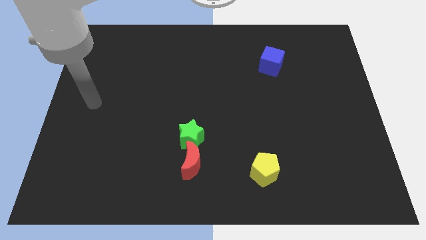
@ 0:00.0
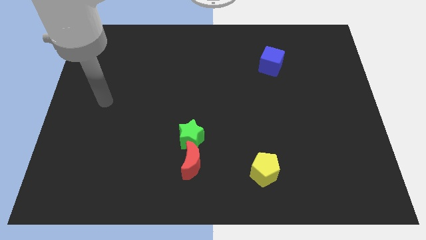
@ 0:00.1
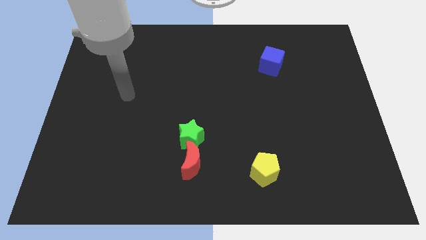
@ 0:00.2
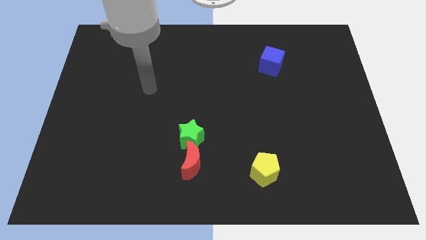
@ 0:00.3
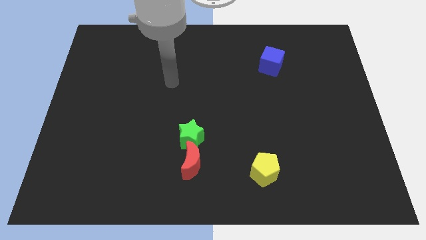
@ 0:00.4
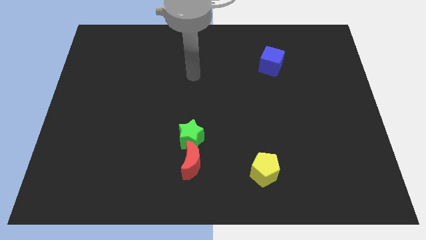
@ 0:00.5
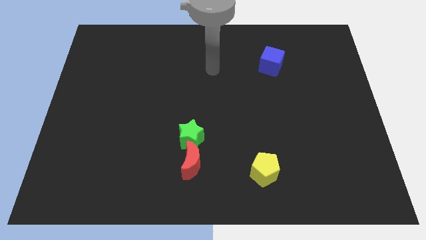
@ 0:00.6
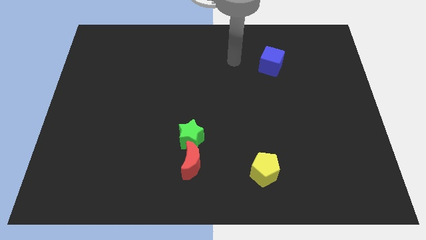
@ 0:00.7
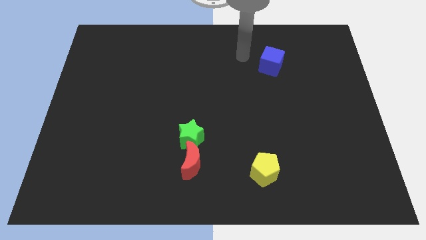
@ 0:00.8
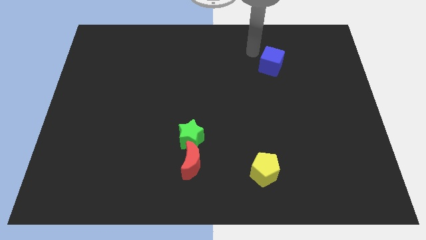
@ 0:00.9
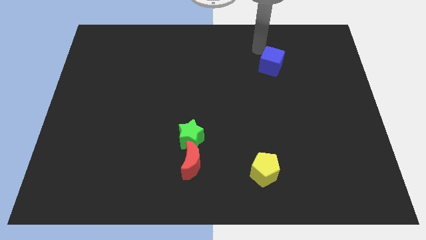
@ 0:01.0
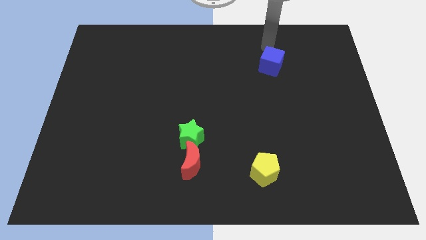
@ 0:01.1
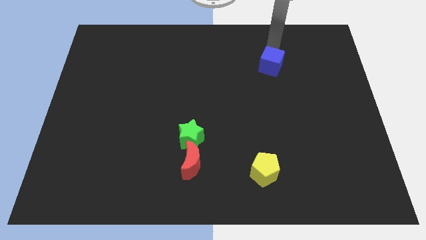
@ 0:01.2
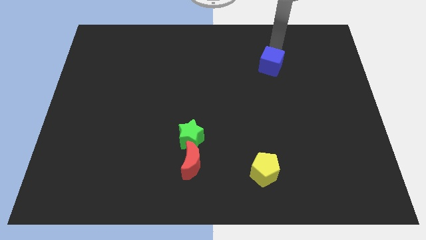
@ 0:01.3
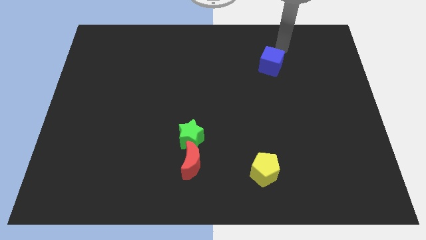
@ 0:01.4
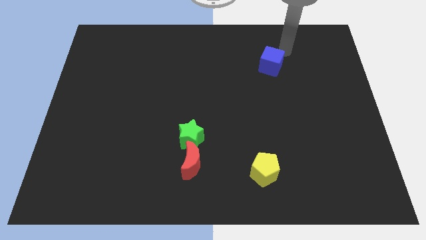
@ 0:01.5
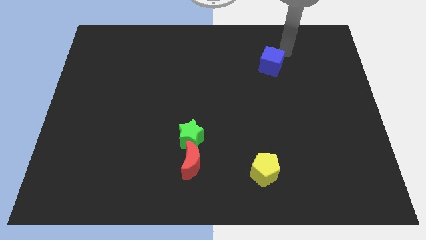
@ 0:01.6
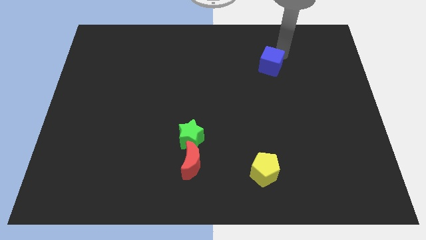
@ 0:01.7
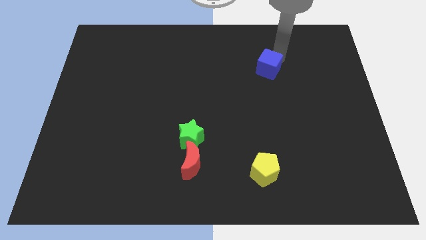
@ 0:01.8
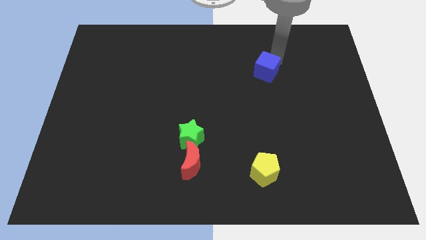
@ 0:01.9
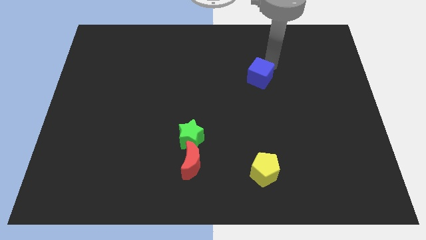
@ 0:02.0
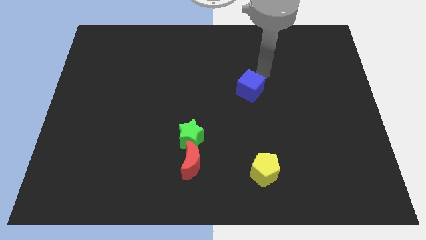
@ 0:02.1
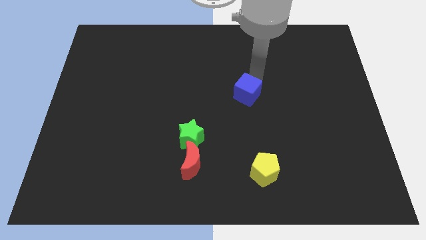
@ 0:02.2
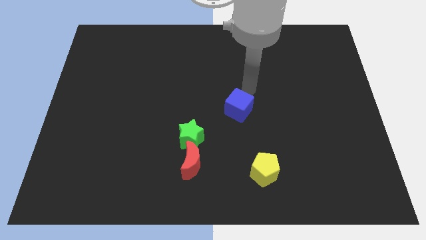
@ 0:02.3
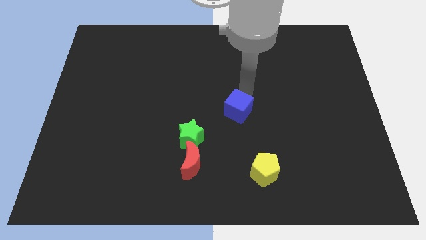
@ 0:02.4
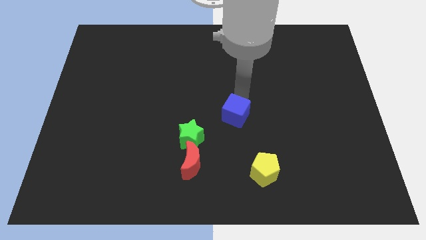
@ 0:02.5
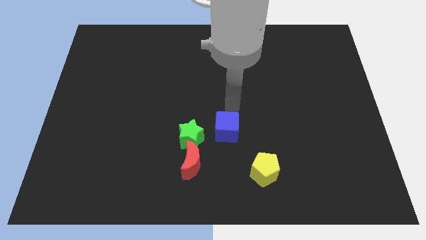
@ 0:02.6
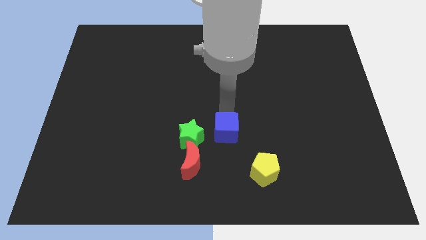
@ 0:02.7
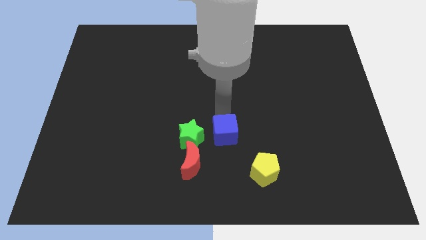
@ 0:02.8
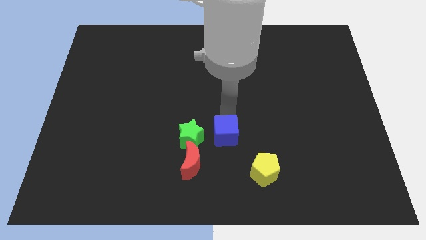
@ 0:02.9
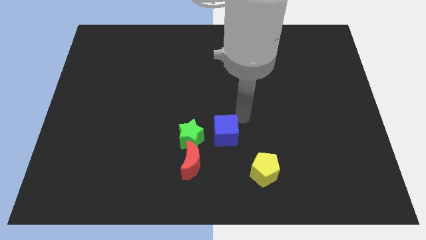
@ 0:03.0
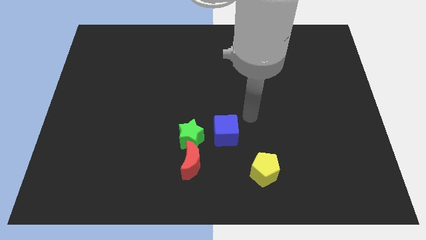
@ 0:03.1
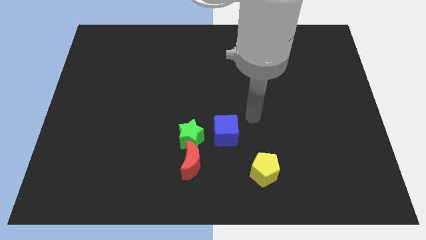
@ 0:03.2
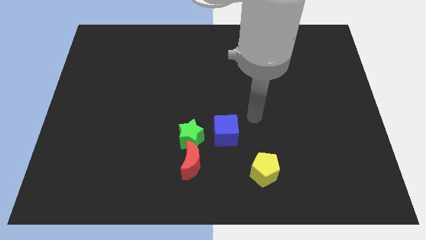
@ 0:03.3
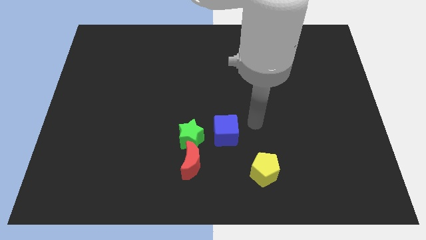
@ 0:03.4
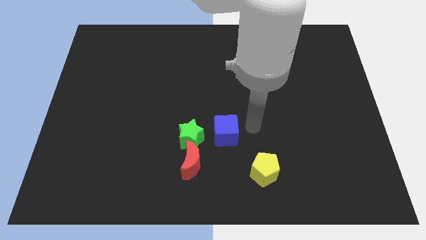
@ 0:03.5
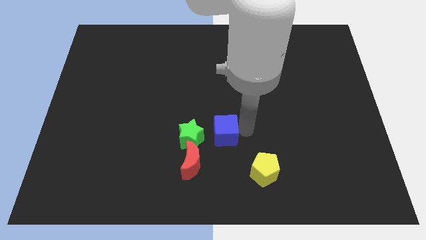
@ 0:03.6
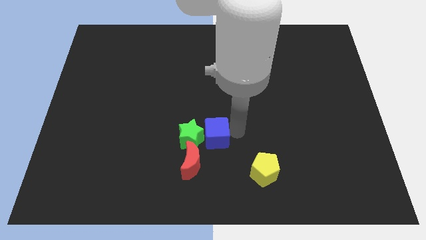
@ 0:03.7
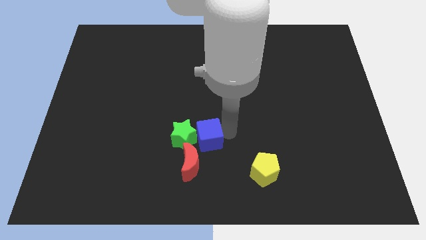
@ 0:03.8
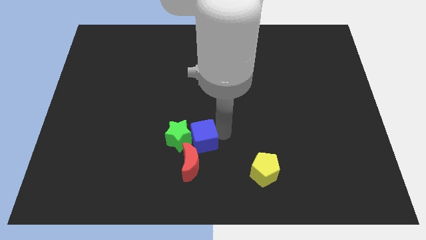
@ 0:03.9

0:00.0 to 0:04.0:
move the blue cube next to the green block

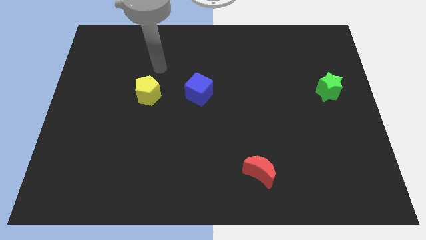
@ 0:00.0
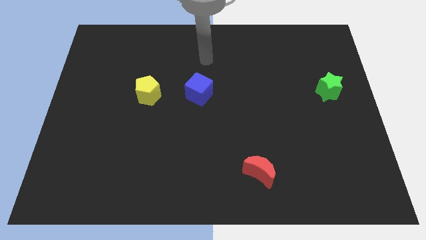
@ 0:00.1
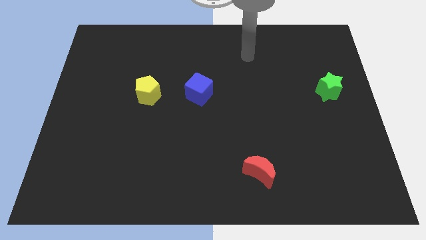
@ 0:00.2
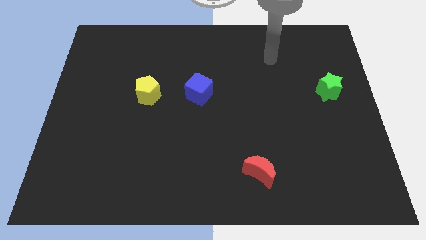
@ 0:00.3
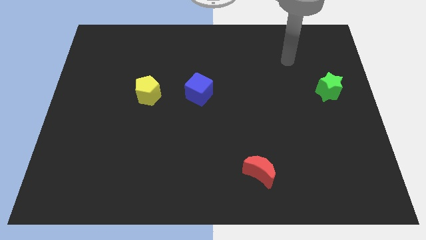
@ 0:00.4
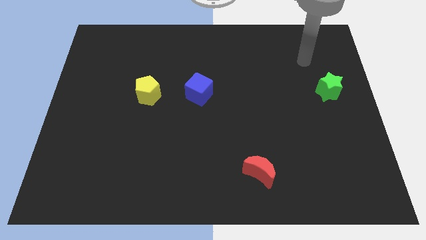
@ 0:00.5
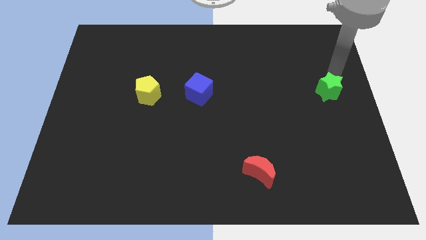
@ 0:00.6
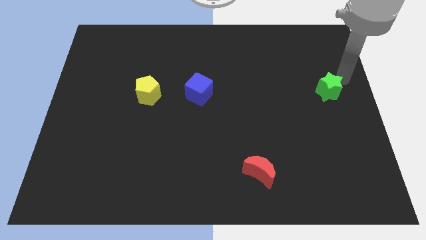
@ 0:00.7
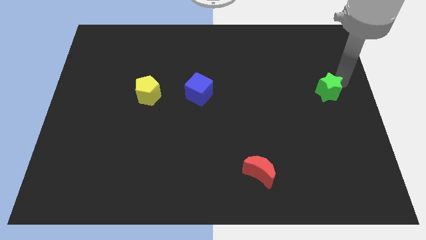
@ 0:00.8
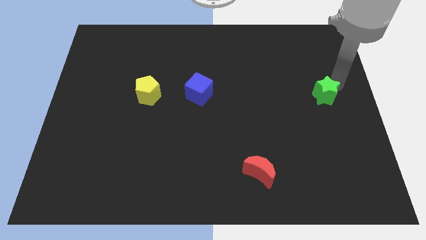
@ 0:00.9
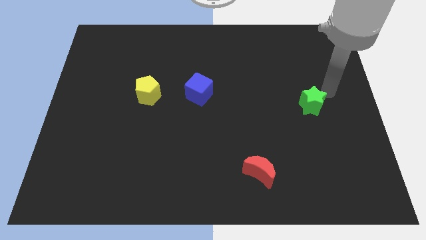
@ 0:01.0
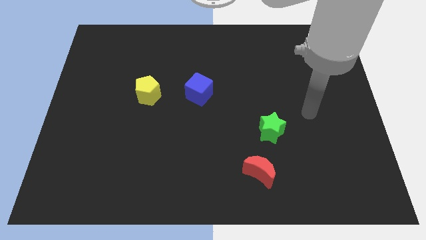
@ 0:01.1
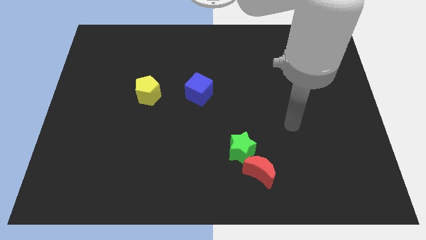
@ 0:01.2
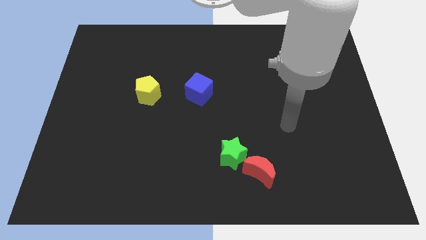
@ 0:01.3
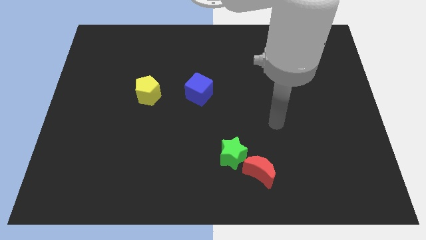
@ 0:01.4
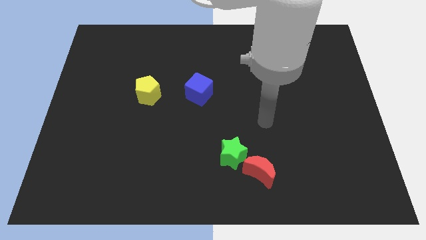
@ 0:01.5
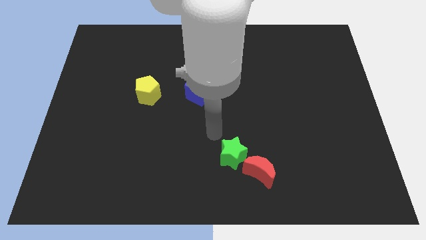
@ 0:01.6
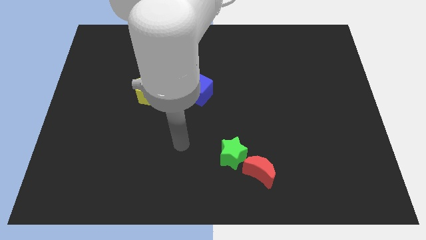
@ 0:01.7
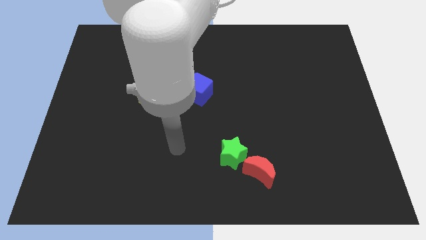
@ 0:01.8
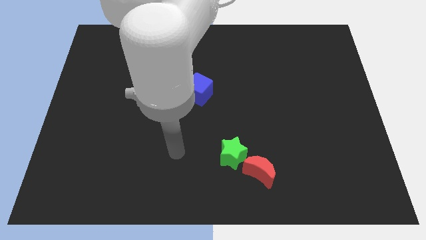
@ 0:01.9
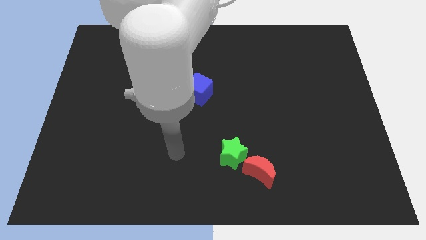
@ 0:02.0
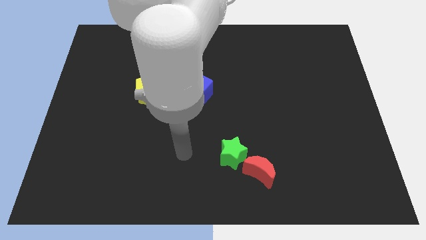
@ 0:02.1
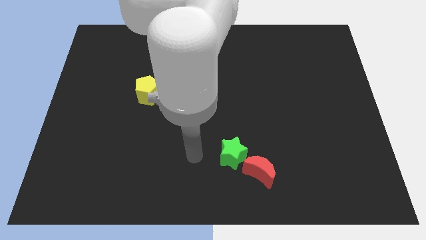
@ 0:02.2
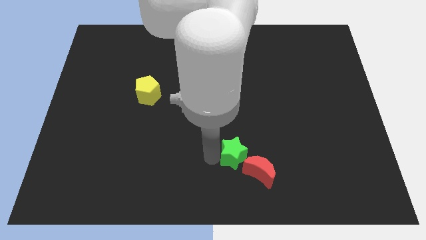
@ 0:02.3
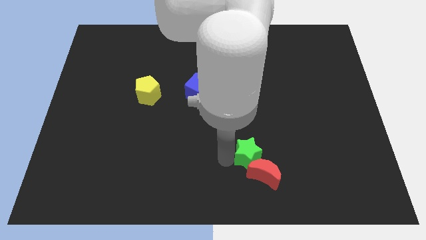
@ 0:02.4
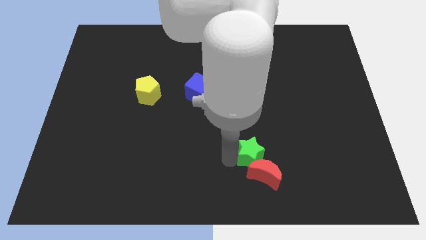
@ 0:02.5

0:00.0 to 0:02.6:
slide the green star to the moon

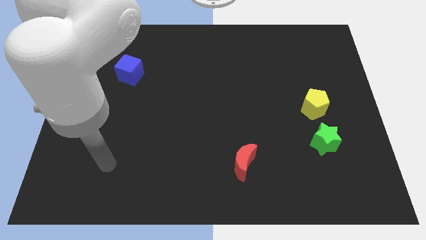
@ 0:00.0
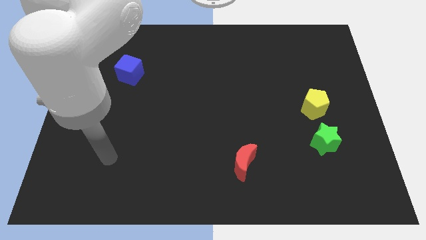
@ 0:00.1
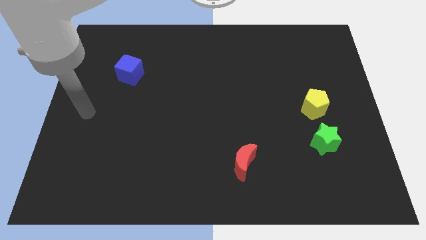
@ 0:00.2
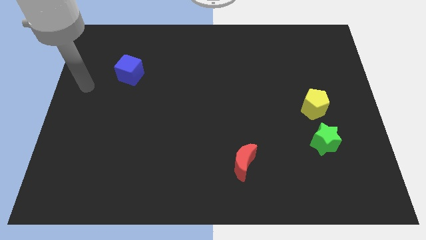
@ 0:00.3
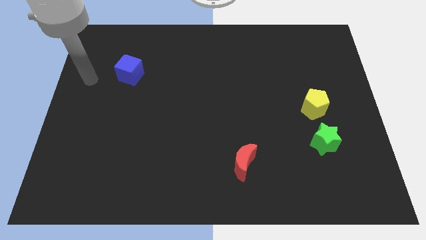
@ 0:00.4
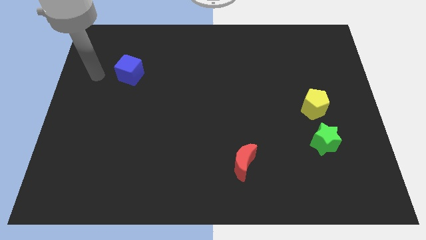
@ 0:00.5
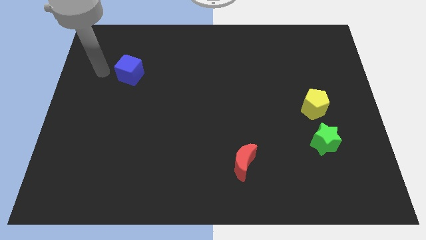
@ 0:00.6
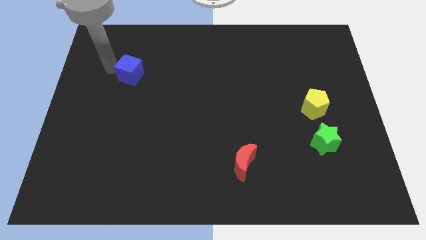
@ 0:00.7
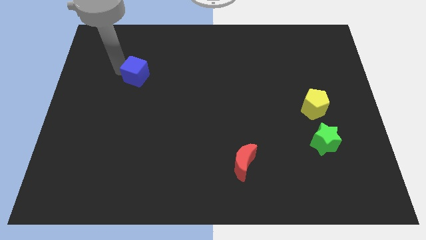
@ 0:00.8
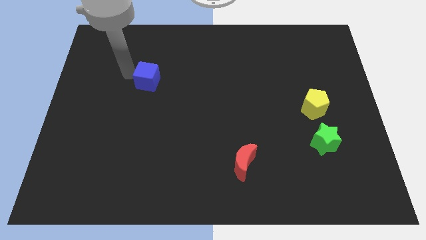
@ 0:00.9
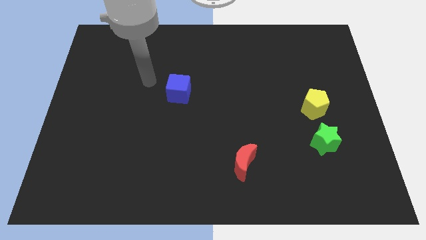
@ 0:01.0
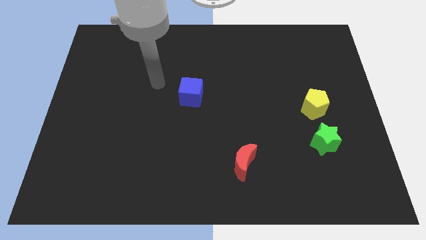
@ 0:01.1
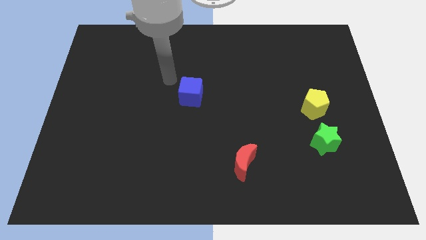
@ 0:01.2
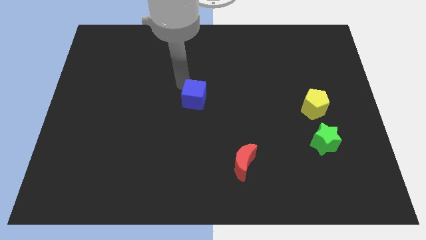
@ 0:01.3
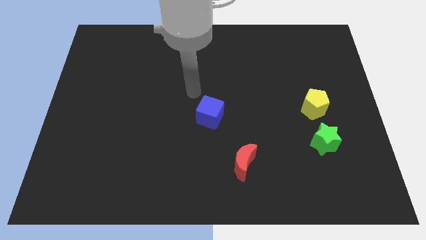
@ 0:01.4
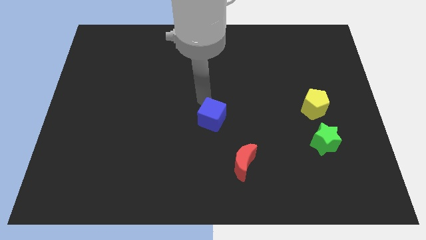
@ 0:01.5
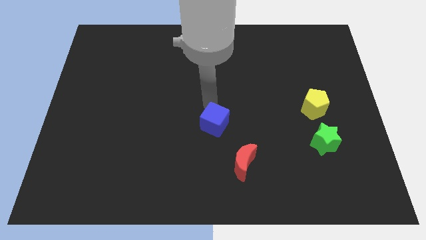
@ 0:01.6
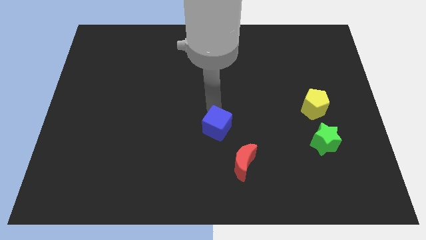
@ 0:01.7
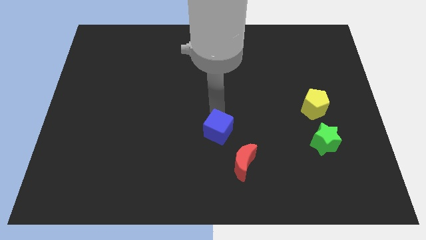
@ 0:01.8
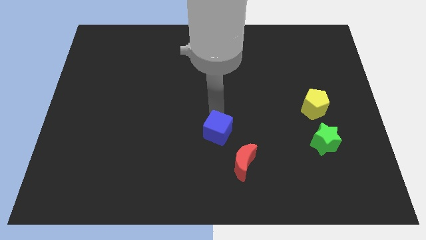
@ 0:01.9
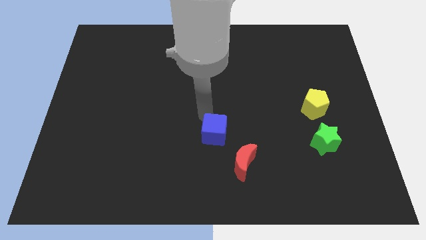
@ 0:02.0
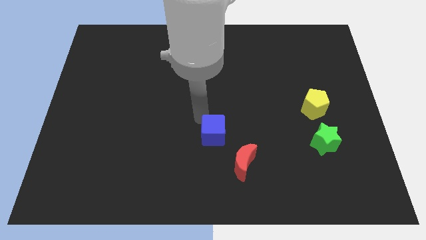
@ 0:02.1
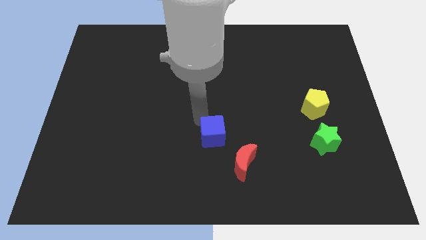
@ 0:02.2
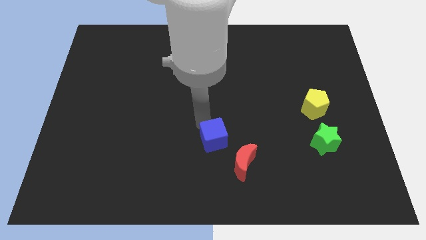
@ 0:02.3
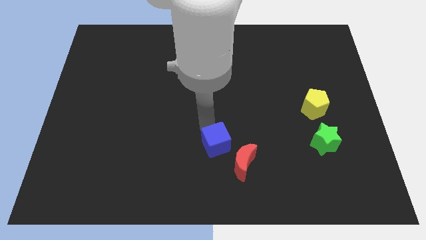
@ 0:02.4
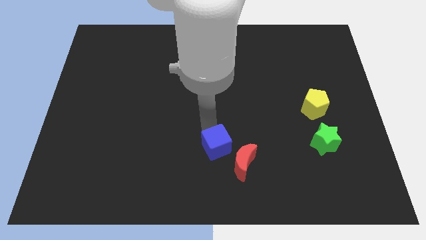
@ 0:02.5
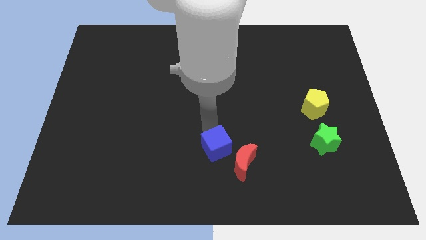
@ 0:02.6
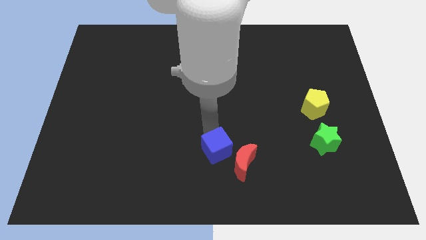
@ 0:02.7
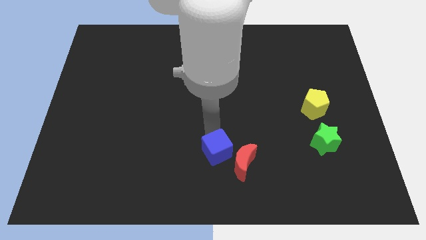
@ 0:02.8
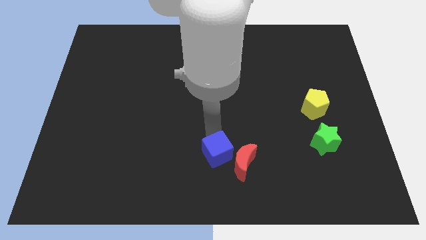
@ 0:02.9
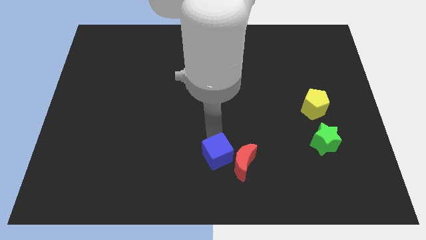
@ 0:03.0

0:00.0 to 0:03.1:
move the blue block towards the red moon
